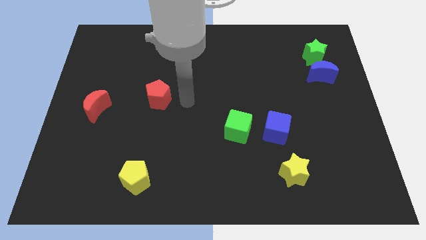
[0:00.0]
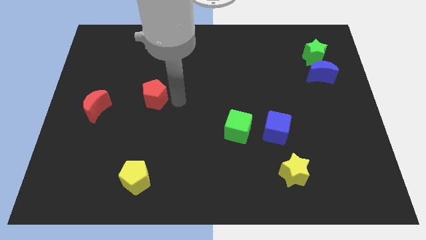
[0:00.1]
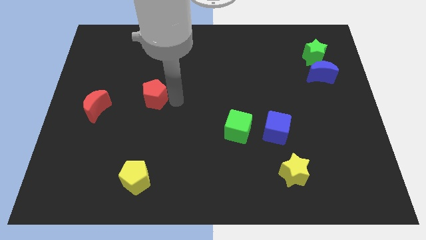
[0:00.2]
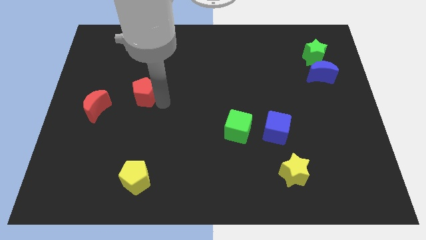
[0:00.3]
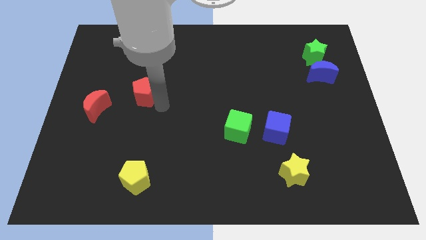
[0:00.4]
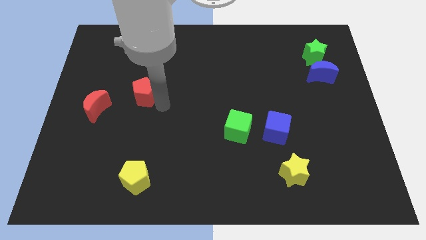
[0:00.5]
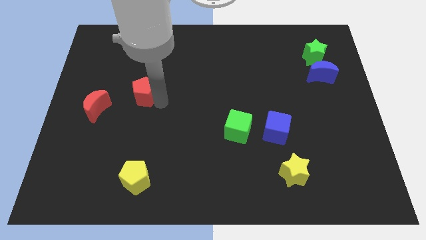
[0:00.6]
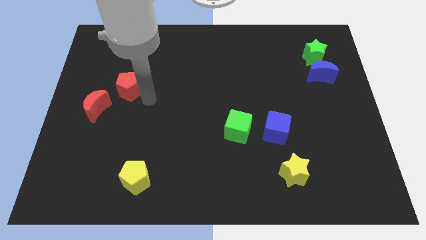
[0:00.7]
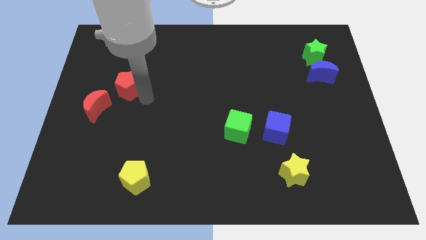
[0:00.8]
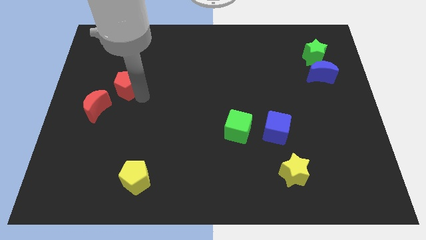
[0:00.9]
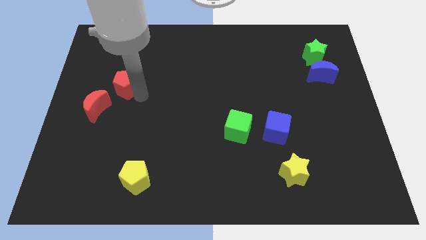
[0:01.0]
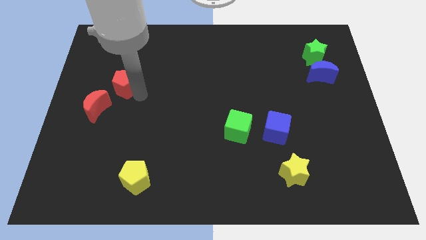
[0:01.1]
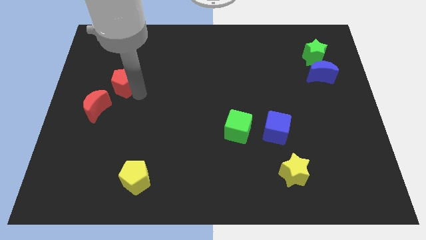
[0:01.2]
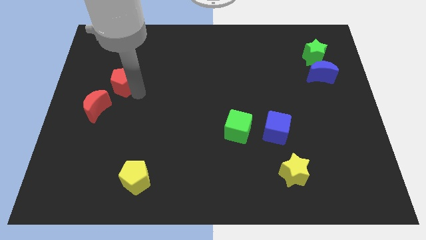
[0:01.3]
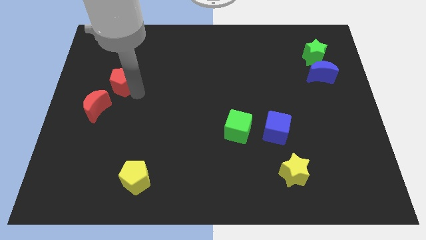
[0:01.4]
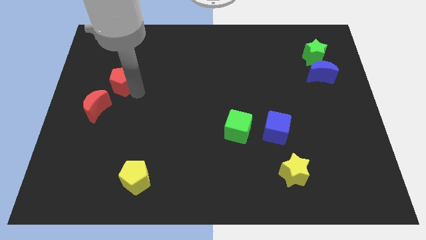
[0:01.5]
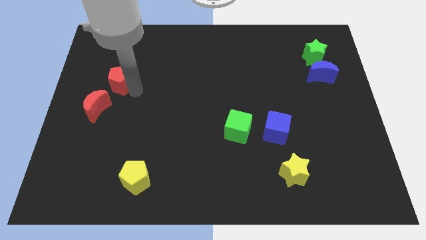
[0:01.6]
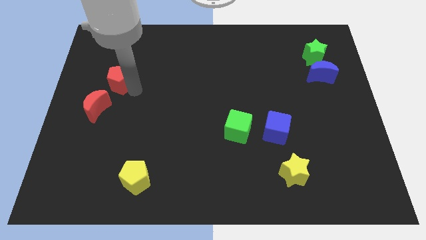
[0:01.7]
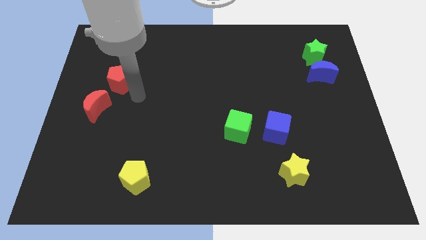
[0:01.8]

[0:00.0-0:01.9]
place the red pentagon above the red moon

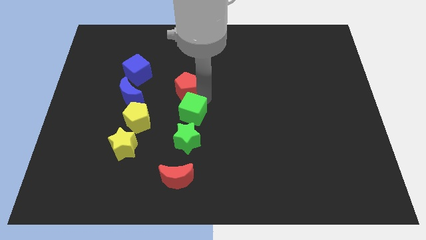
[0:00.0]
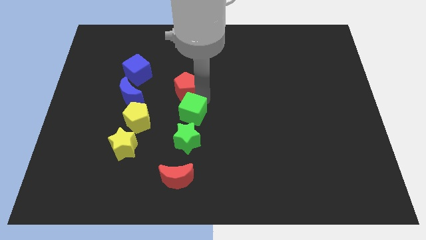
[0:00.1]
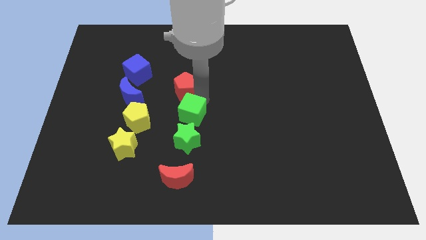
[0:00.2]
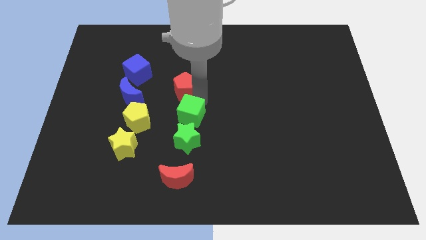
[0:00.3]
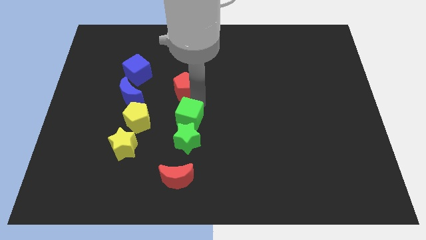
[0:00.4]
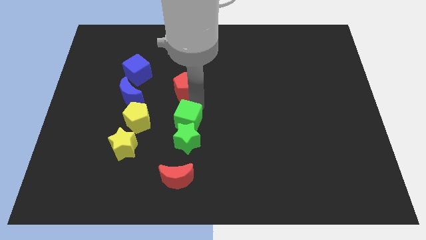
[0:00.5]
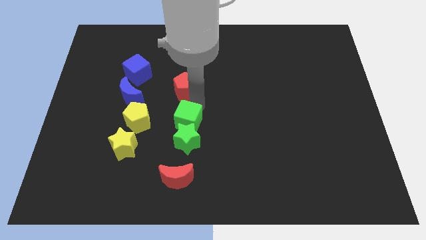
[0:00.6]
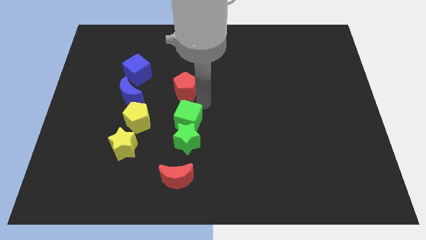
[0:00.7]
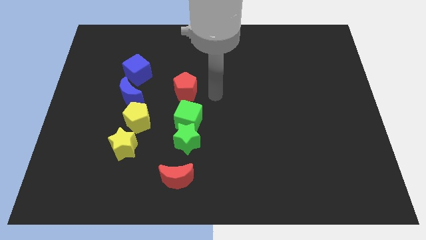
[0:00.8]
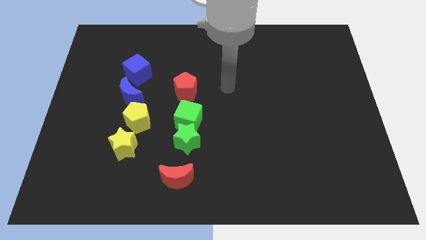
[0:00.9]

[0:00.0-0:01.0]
adjust the green cube in between the green star and the red pentagon

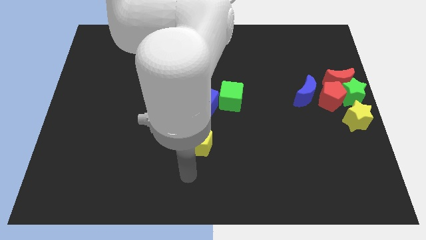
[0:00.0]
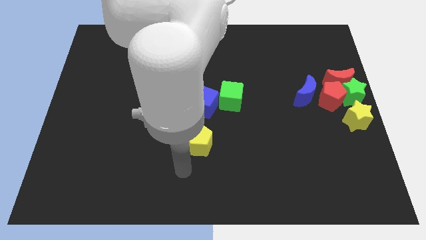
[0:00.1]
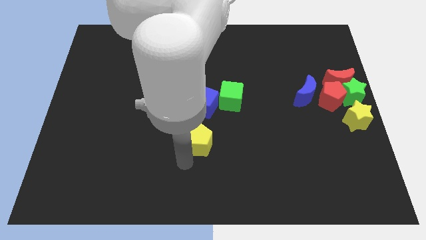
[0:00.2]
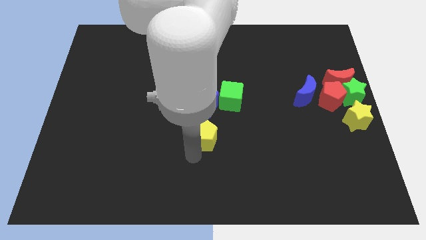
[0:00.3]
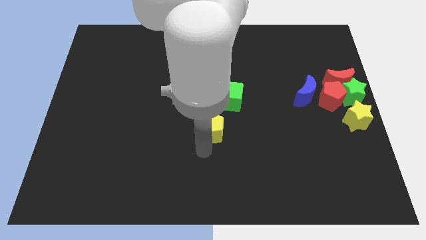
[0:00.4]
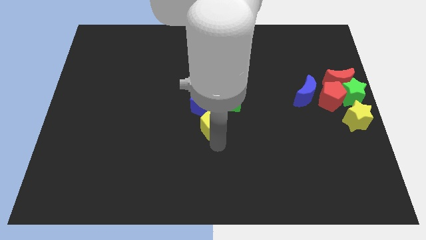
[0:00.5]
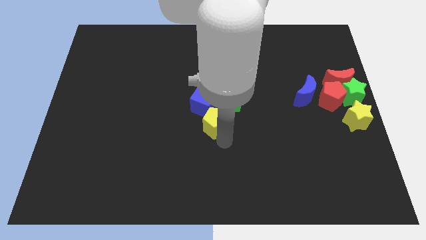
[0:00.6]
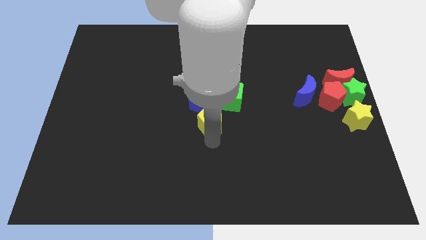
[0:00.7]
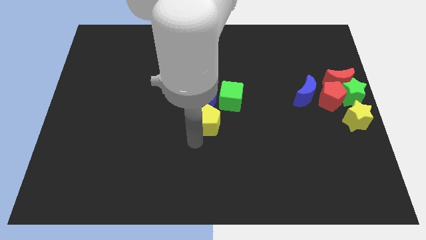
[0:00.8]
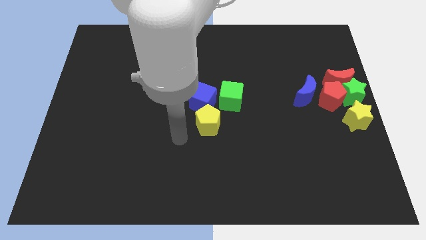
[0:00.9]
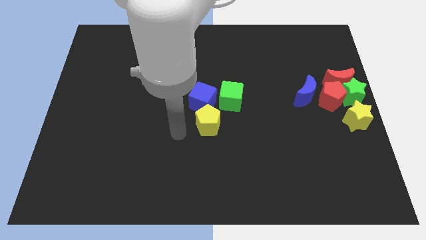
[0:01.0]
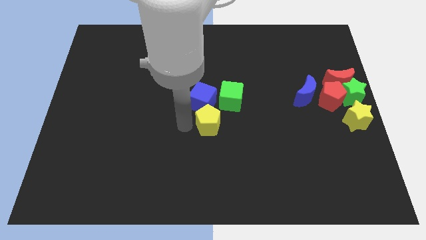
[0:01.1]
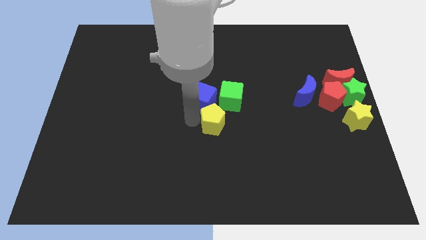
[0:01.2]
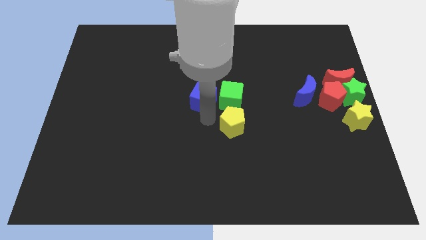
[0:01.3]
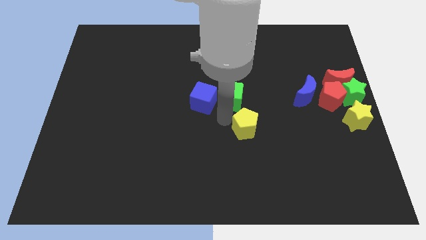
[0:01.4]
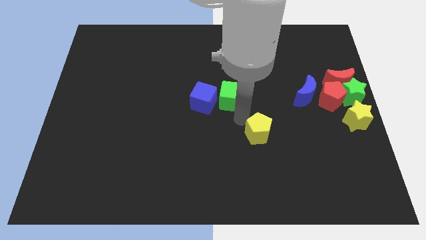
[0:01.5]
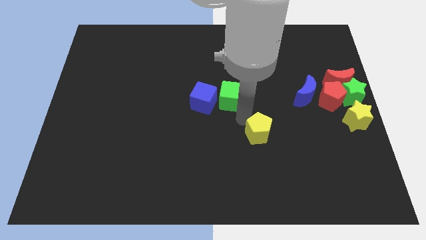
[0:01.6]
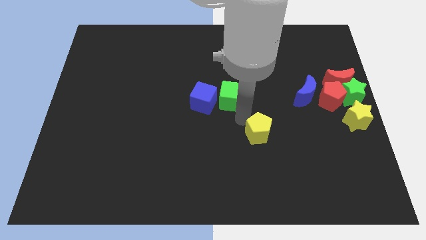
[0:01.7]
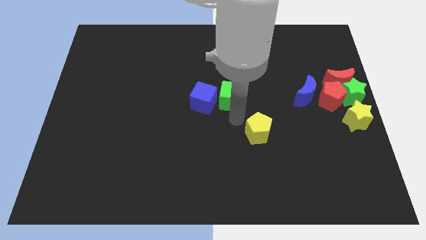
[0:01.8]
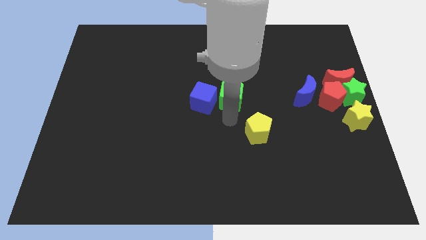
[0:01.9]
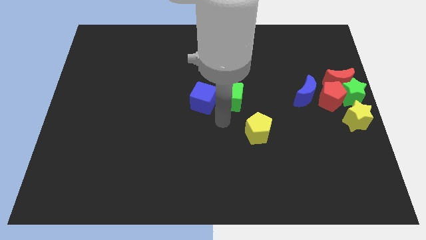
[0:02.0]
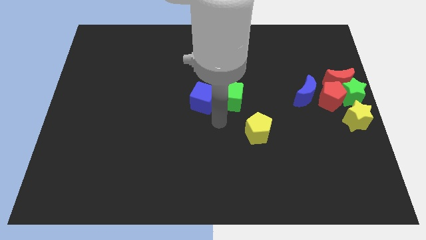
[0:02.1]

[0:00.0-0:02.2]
move the yellow pentagon to the bottom right of the green cube

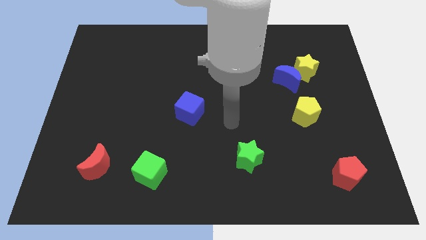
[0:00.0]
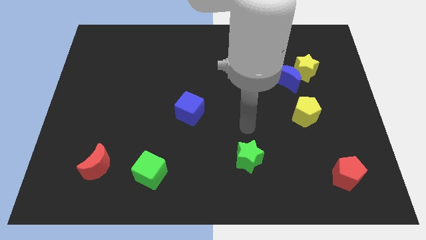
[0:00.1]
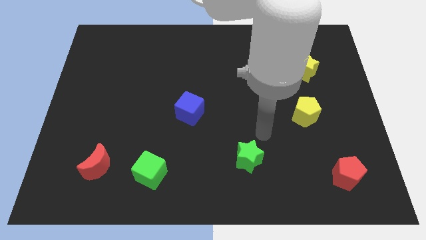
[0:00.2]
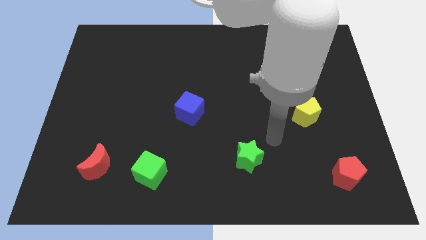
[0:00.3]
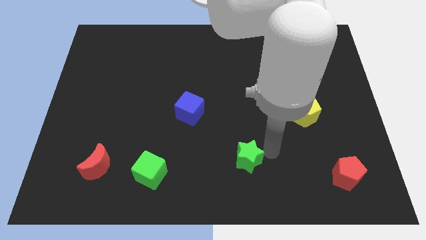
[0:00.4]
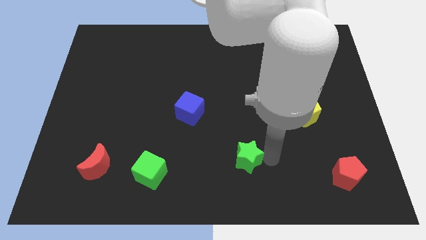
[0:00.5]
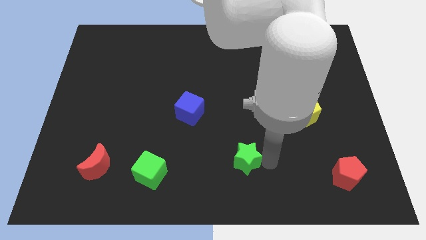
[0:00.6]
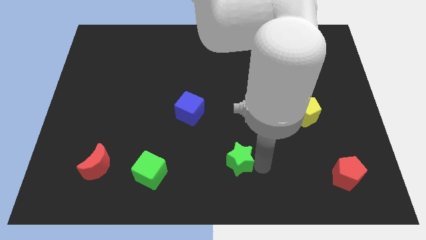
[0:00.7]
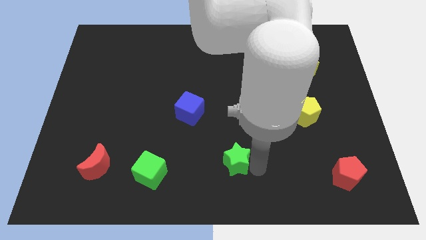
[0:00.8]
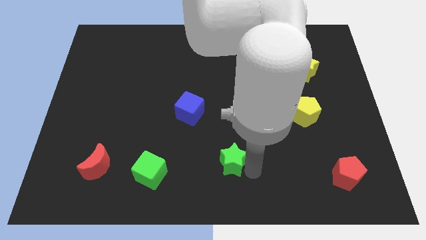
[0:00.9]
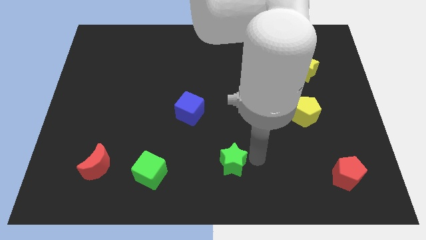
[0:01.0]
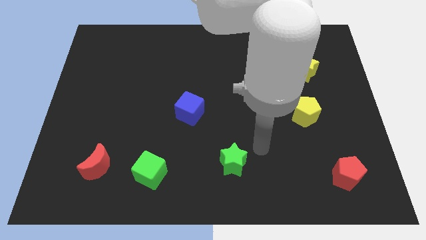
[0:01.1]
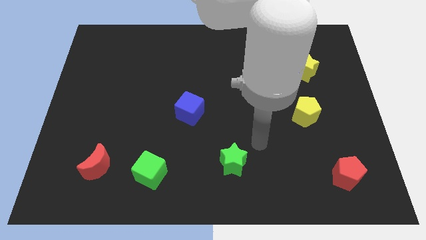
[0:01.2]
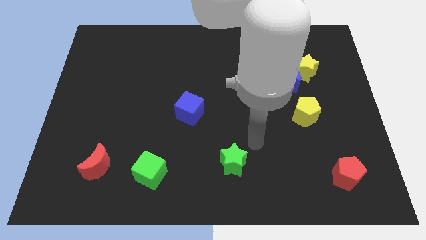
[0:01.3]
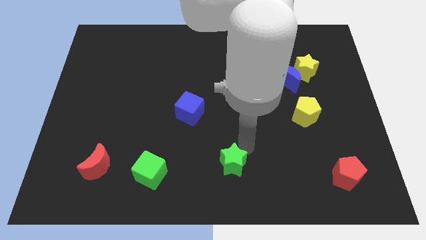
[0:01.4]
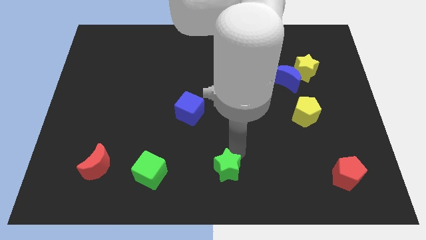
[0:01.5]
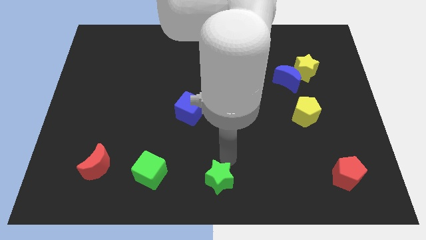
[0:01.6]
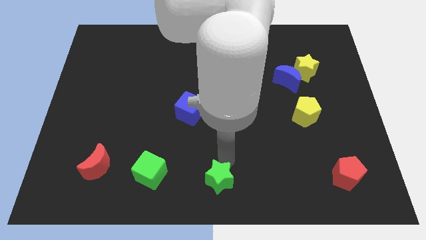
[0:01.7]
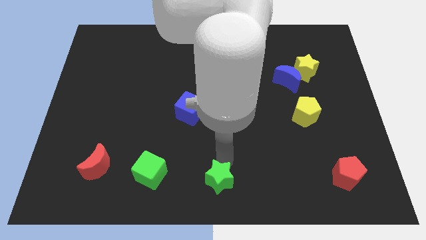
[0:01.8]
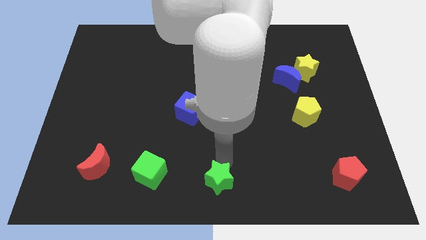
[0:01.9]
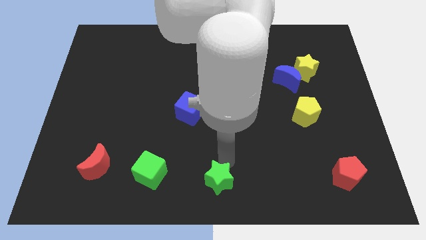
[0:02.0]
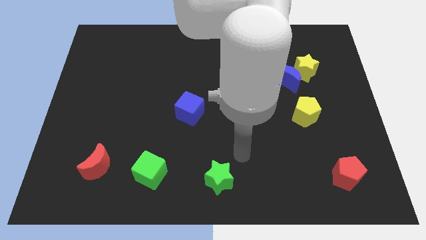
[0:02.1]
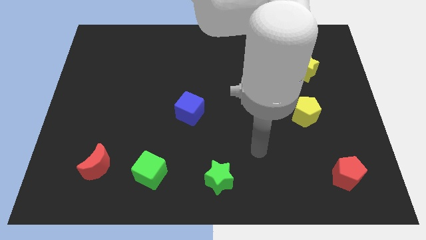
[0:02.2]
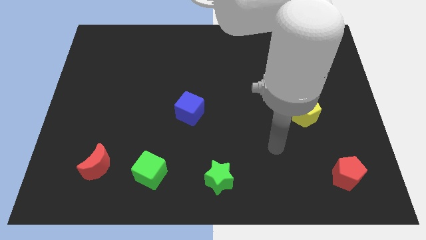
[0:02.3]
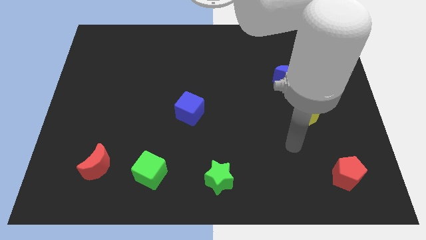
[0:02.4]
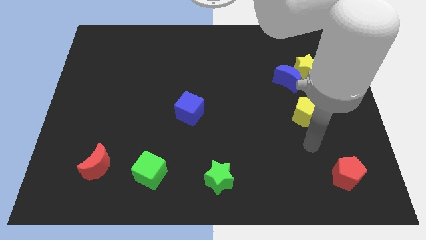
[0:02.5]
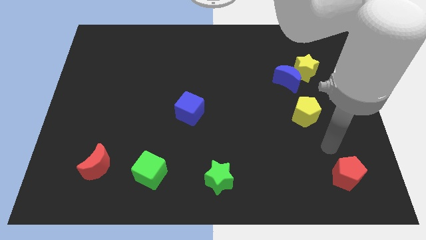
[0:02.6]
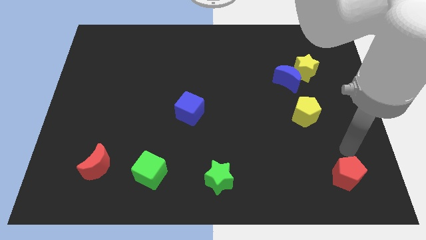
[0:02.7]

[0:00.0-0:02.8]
move the green star slightly towards the bottom center of the board

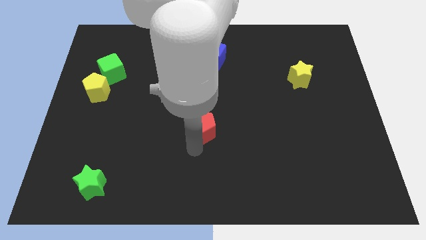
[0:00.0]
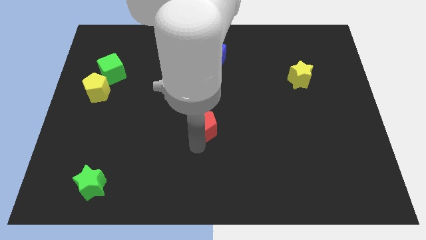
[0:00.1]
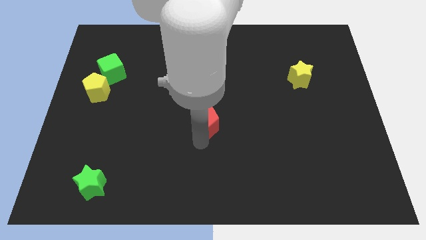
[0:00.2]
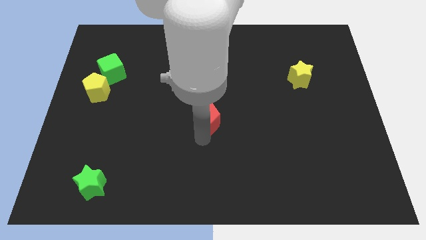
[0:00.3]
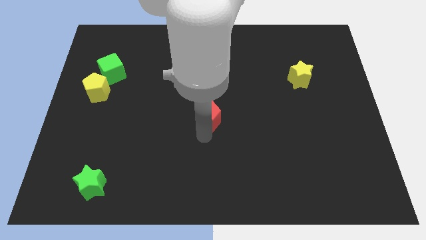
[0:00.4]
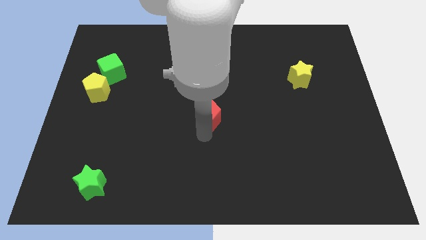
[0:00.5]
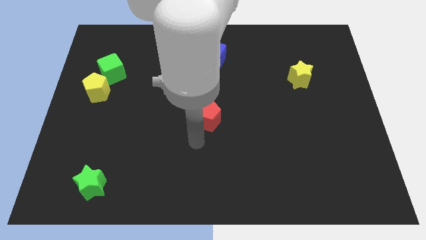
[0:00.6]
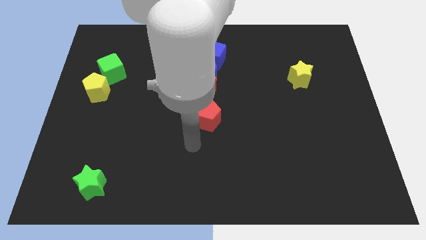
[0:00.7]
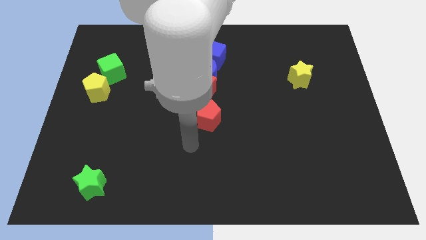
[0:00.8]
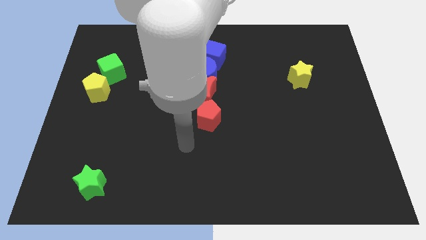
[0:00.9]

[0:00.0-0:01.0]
push the red pentagon into the red crescent

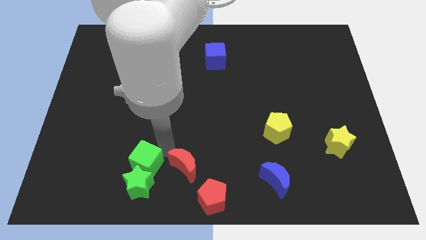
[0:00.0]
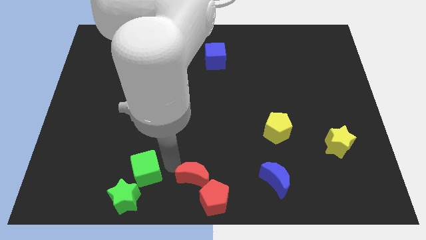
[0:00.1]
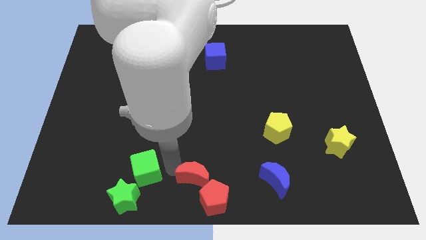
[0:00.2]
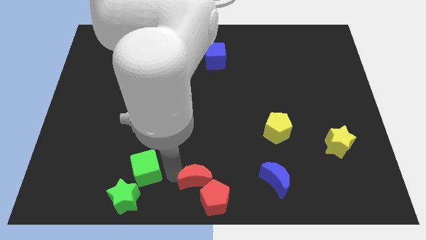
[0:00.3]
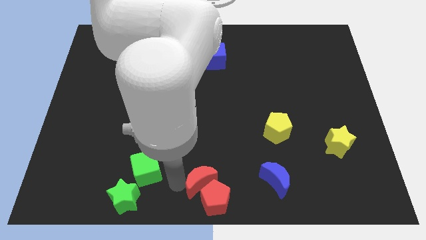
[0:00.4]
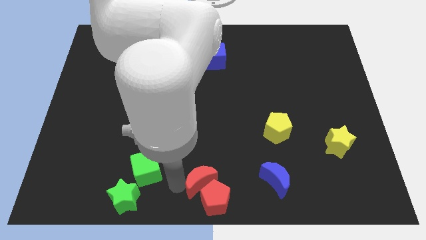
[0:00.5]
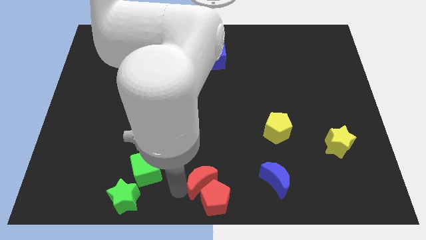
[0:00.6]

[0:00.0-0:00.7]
touch the red pentagon with red crescent
